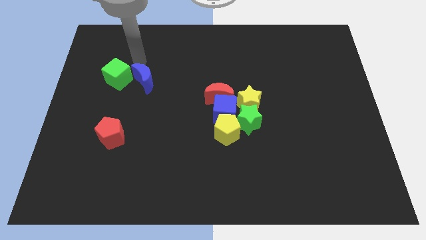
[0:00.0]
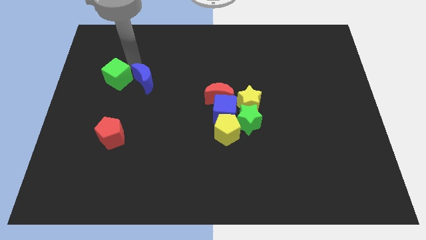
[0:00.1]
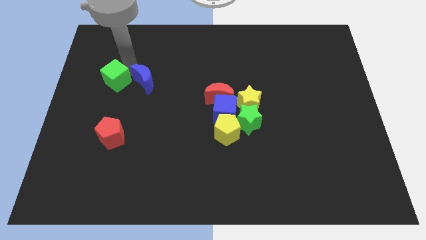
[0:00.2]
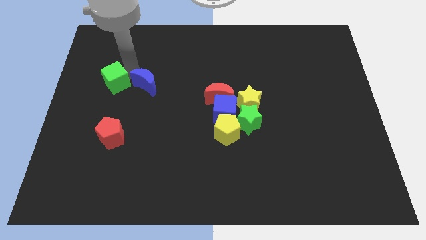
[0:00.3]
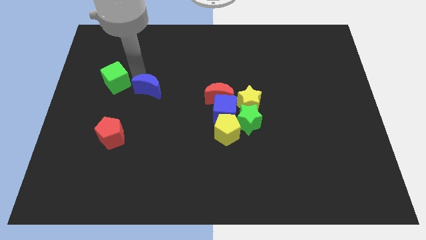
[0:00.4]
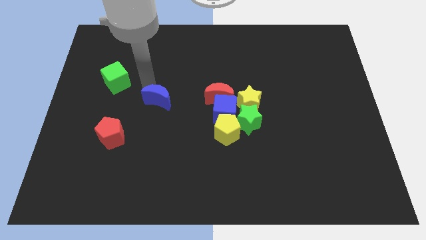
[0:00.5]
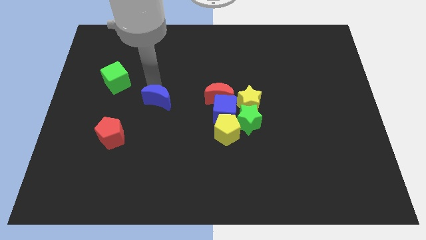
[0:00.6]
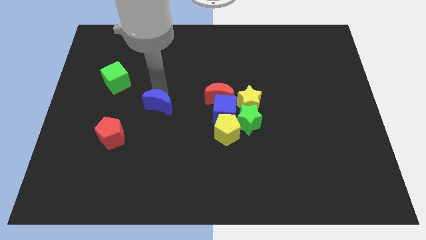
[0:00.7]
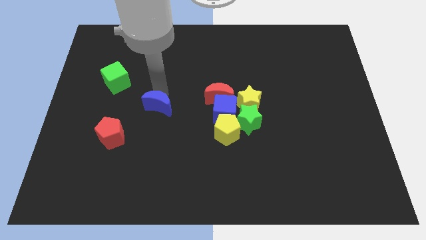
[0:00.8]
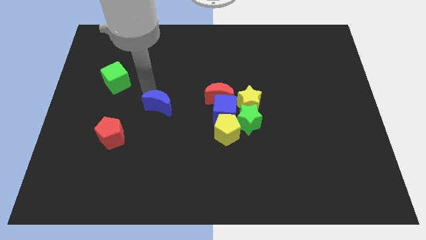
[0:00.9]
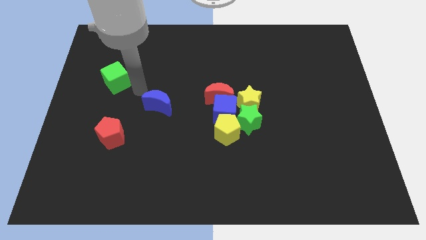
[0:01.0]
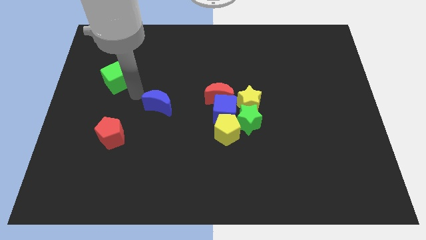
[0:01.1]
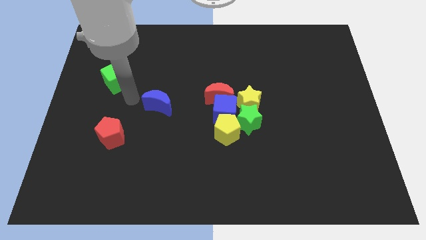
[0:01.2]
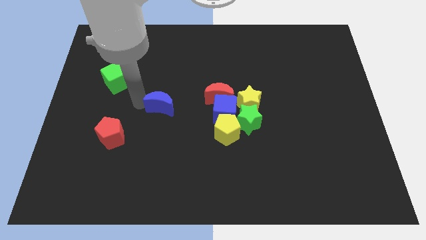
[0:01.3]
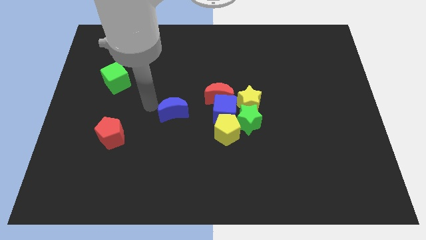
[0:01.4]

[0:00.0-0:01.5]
move the blue crescent to the left side of the blue cube

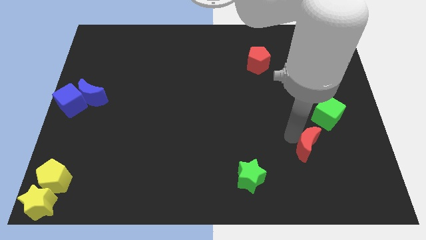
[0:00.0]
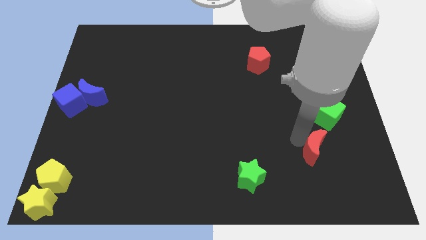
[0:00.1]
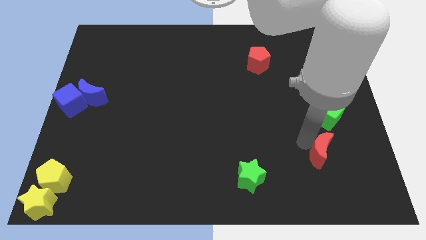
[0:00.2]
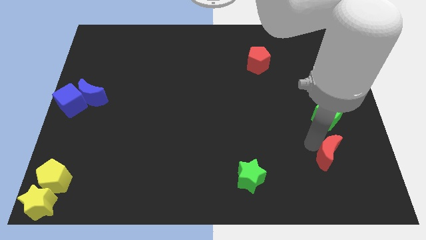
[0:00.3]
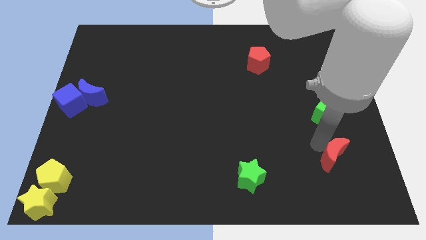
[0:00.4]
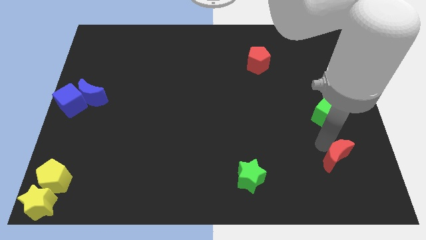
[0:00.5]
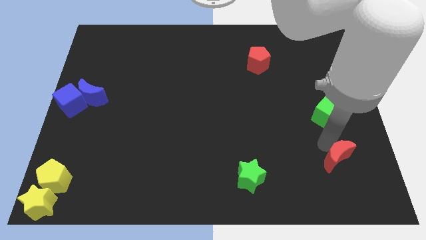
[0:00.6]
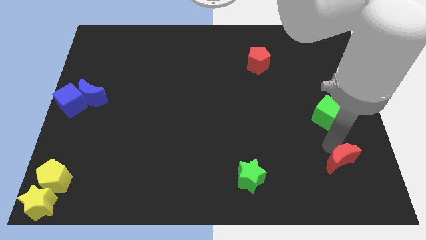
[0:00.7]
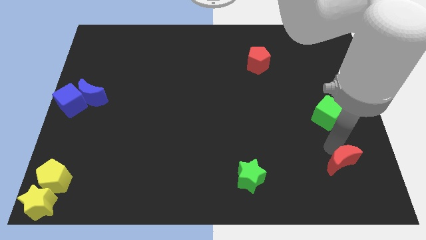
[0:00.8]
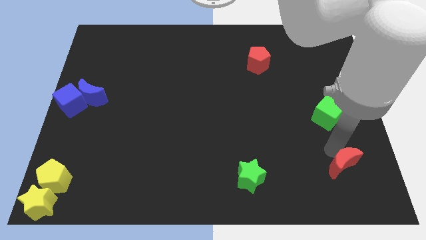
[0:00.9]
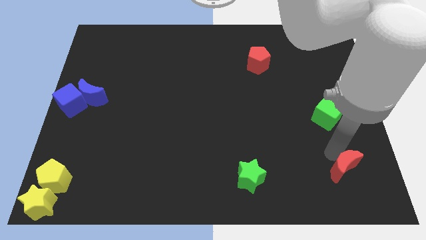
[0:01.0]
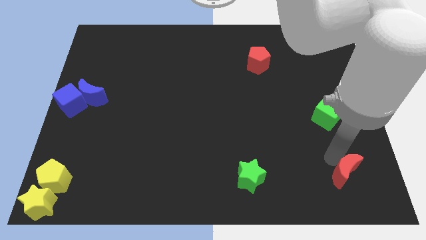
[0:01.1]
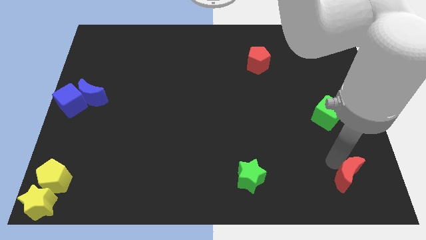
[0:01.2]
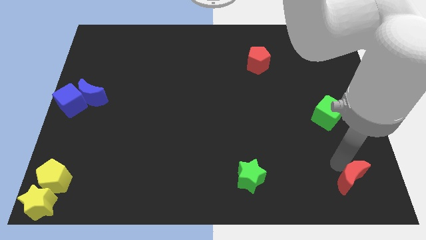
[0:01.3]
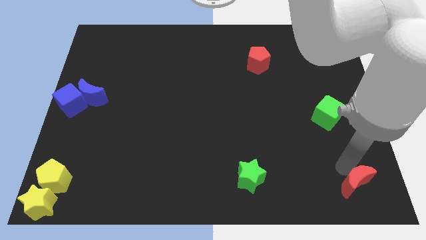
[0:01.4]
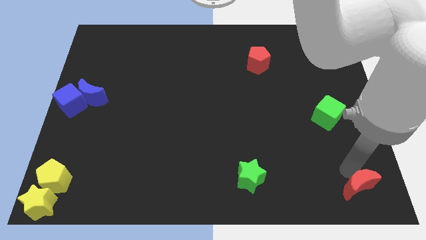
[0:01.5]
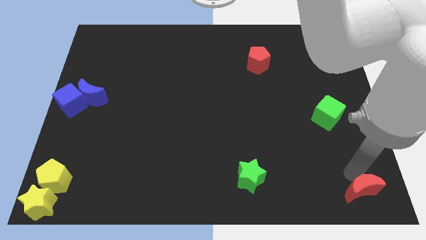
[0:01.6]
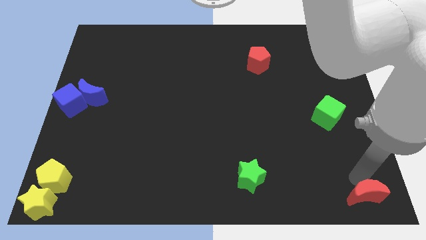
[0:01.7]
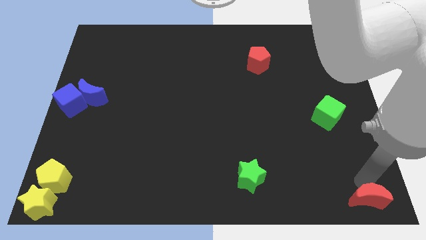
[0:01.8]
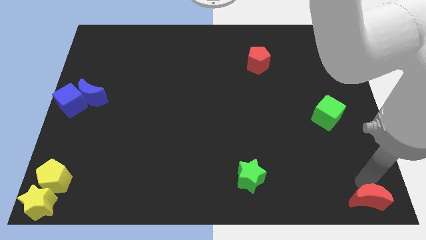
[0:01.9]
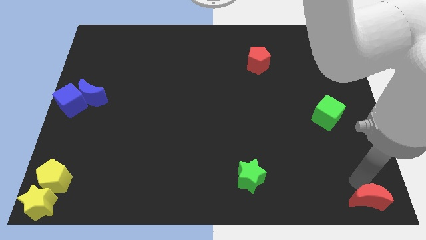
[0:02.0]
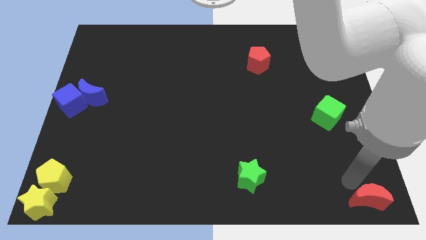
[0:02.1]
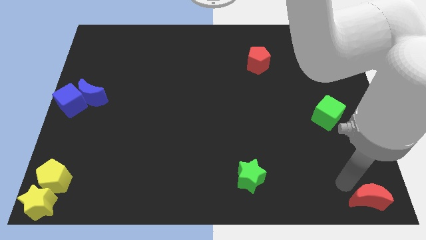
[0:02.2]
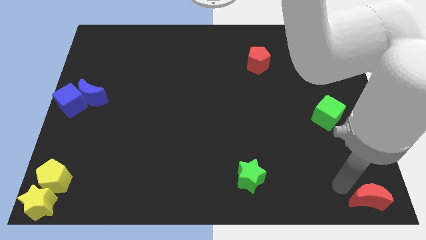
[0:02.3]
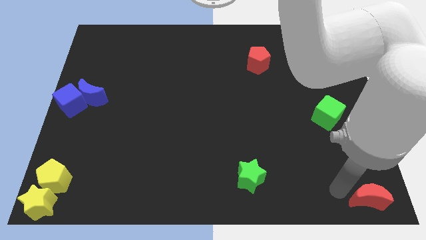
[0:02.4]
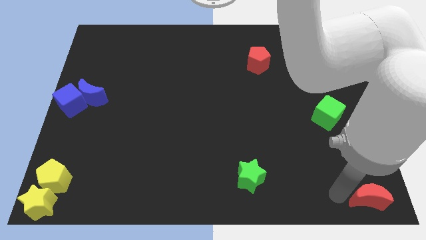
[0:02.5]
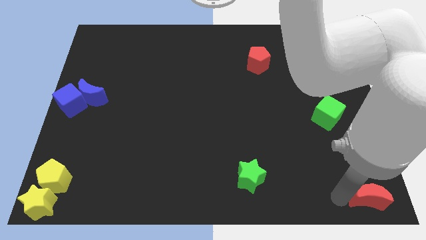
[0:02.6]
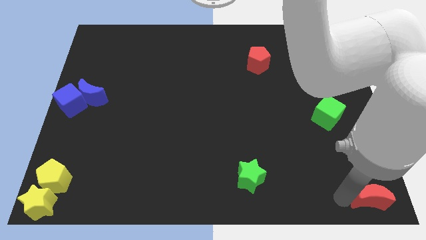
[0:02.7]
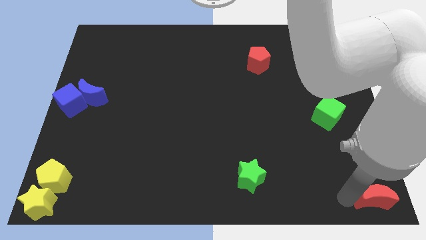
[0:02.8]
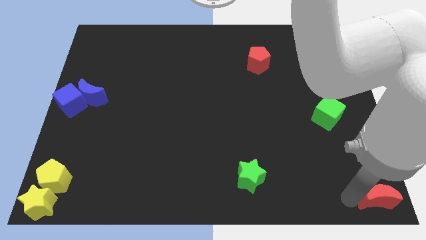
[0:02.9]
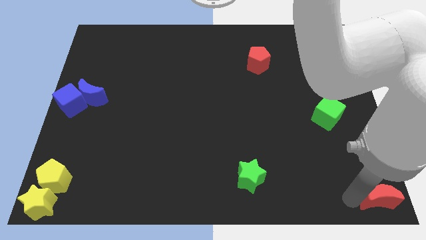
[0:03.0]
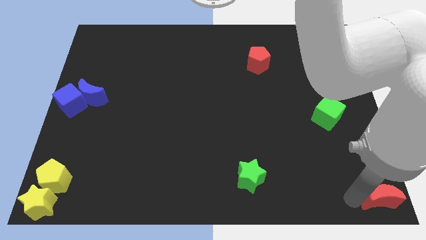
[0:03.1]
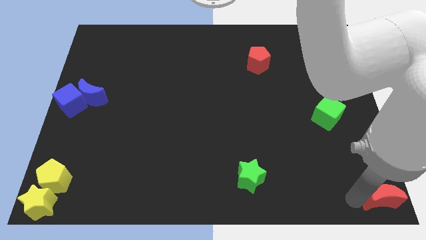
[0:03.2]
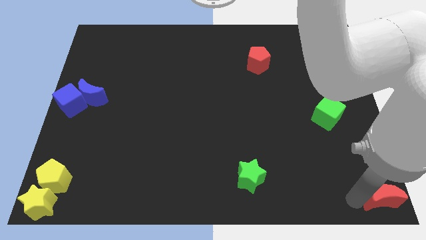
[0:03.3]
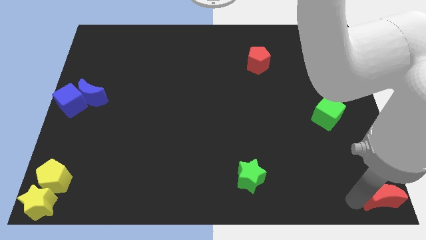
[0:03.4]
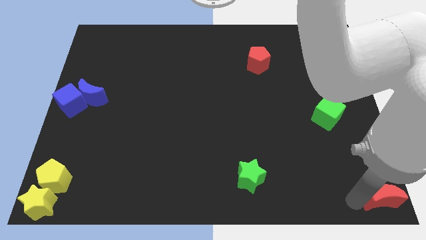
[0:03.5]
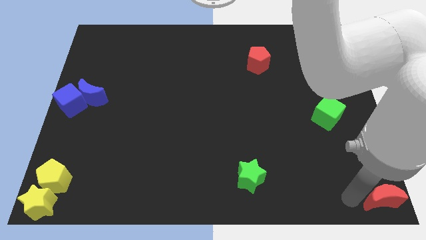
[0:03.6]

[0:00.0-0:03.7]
slide the red crescent to the bottom right of the board

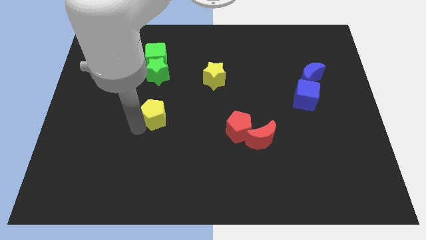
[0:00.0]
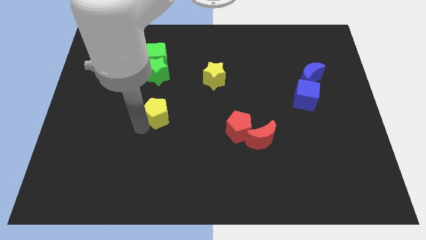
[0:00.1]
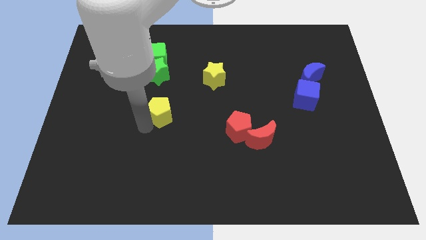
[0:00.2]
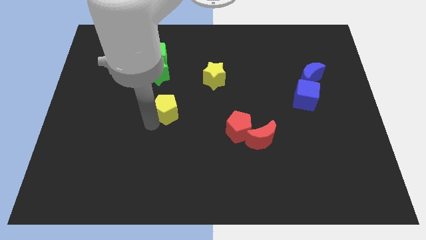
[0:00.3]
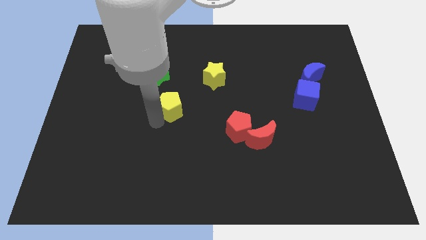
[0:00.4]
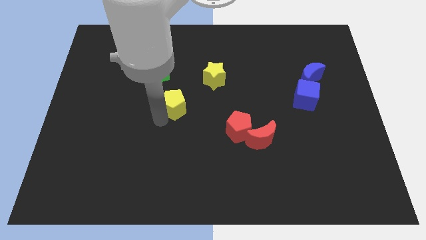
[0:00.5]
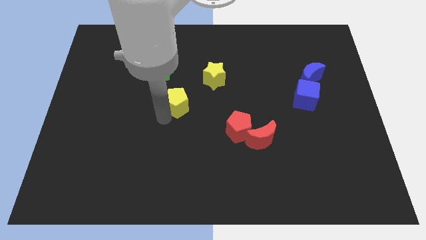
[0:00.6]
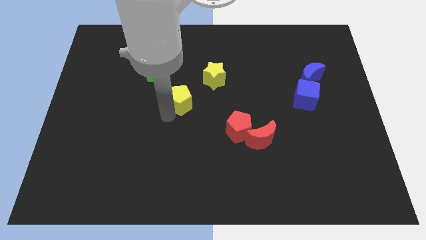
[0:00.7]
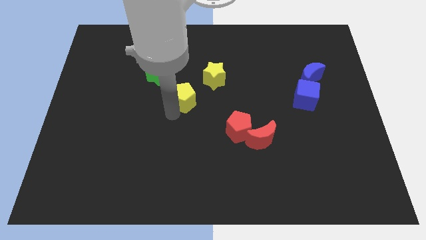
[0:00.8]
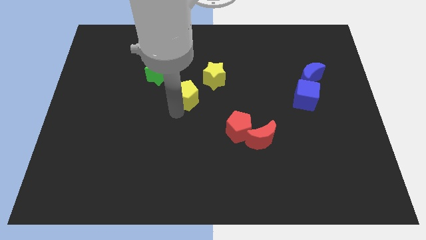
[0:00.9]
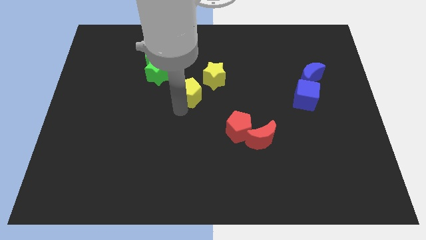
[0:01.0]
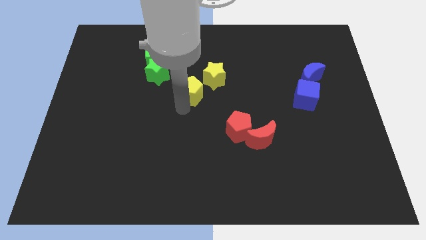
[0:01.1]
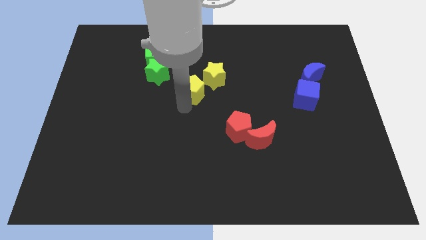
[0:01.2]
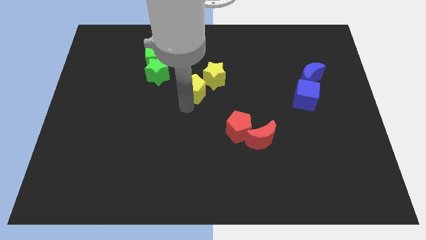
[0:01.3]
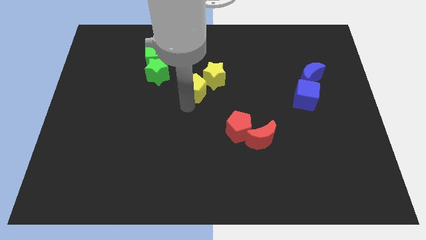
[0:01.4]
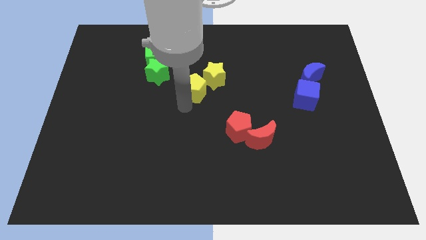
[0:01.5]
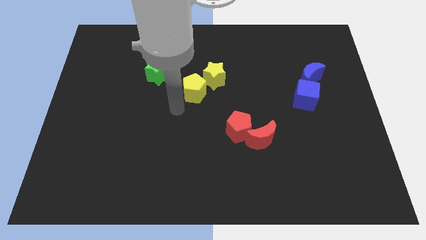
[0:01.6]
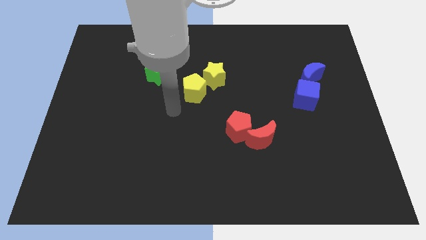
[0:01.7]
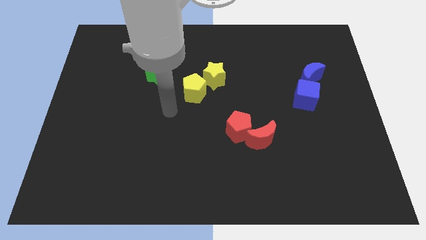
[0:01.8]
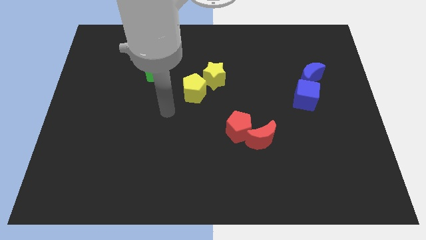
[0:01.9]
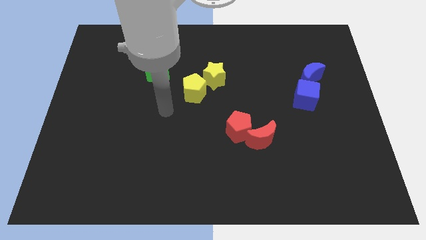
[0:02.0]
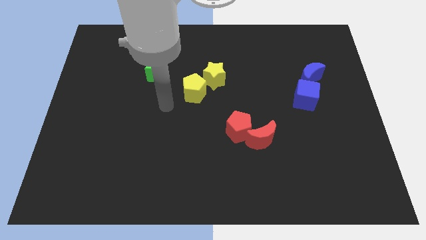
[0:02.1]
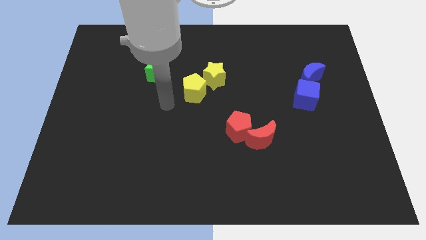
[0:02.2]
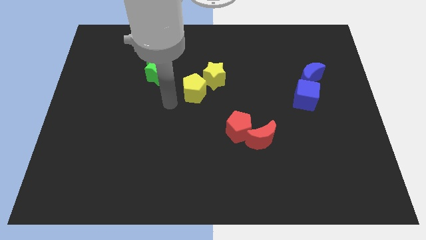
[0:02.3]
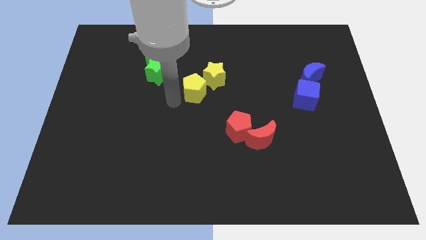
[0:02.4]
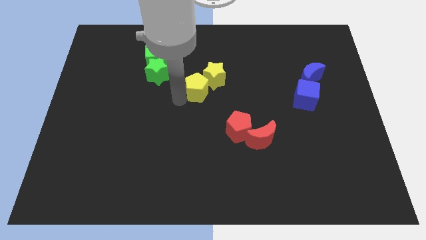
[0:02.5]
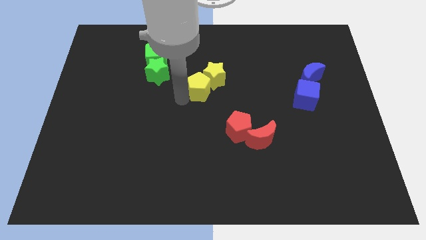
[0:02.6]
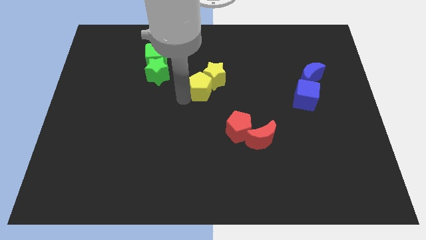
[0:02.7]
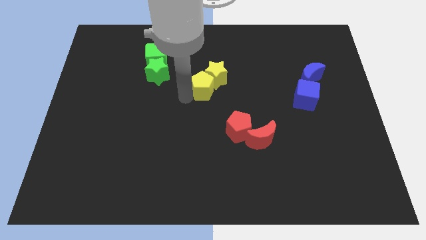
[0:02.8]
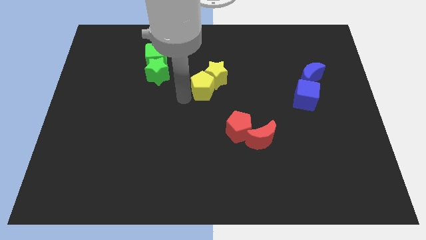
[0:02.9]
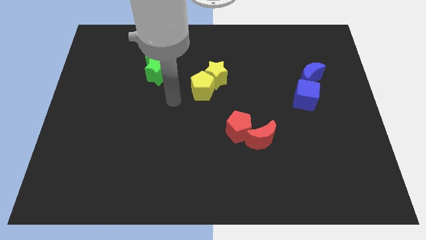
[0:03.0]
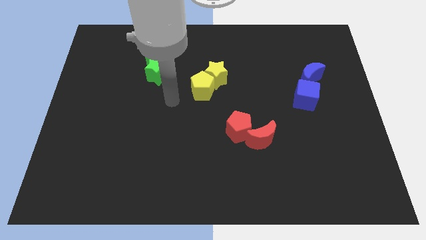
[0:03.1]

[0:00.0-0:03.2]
group up the yellow blocks at the center of the board

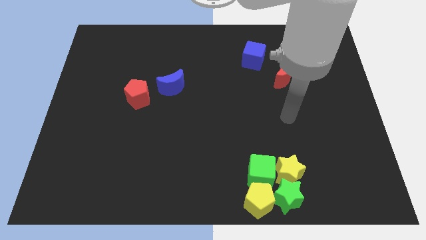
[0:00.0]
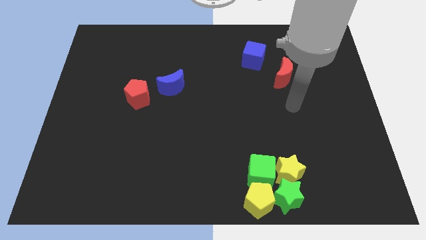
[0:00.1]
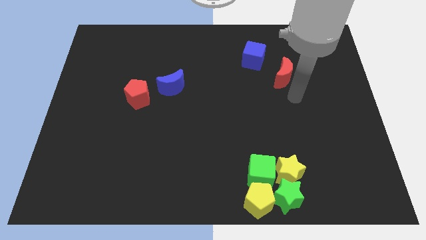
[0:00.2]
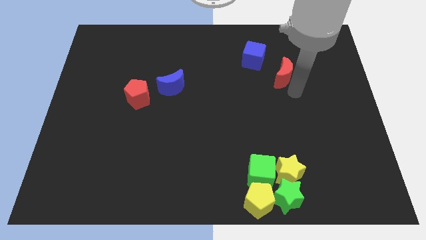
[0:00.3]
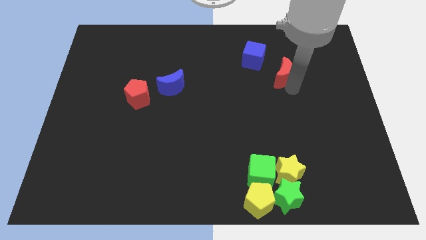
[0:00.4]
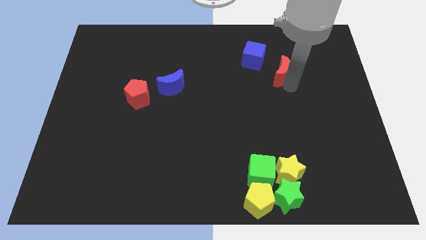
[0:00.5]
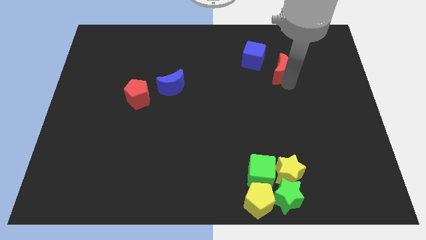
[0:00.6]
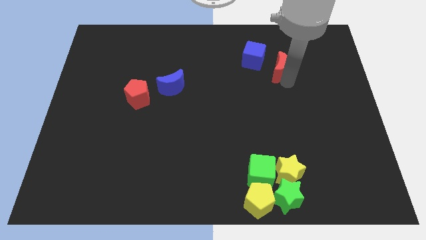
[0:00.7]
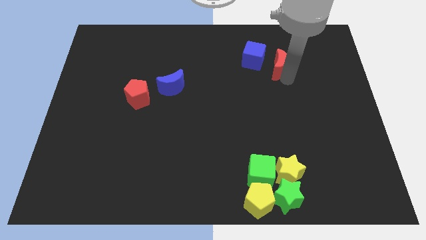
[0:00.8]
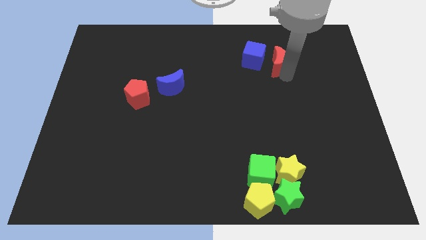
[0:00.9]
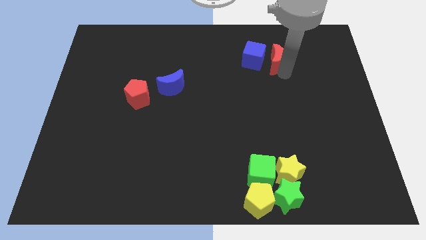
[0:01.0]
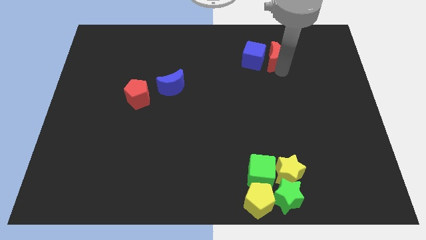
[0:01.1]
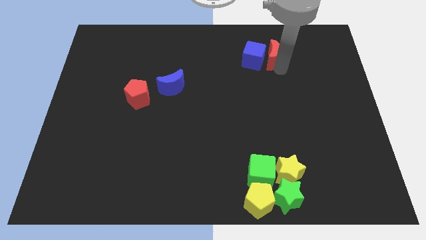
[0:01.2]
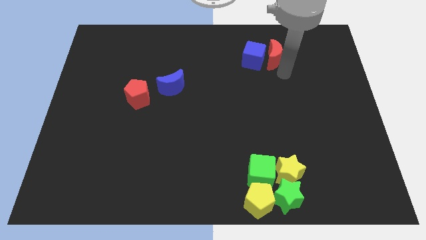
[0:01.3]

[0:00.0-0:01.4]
push the red moon slightly upward
